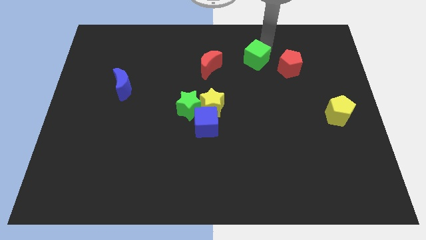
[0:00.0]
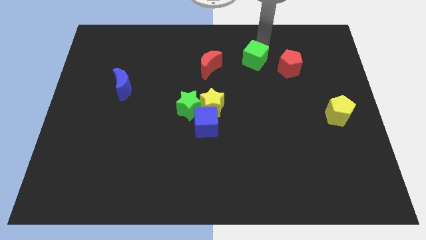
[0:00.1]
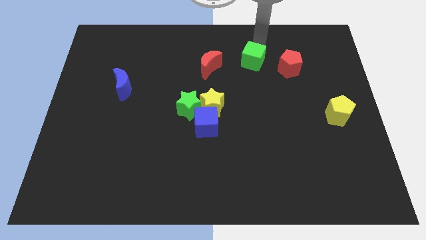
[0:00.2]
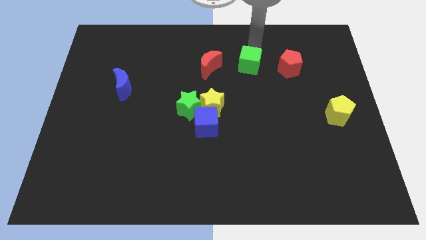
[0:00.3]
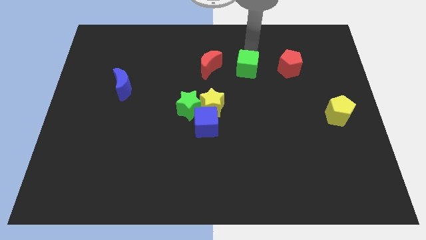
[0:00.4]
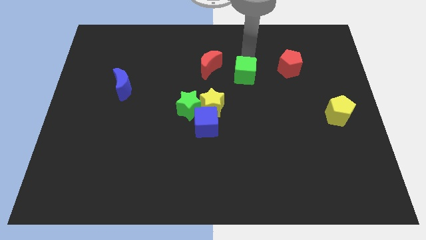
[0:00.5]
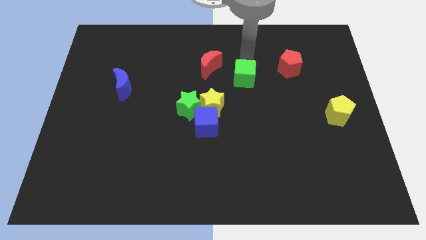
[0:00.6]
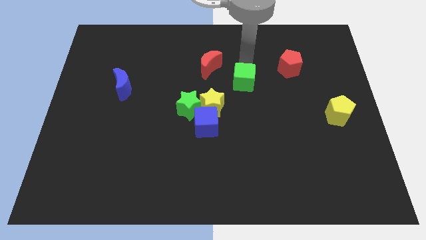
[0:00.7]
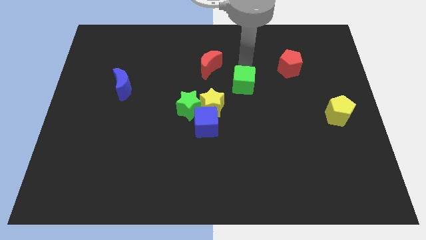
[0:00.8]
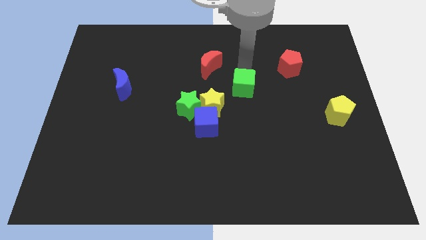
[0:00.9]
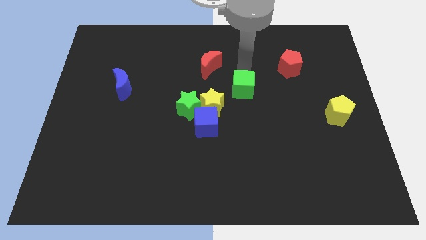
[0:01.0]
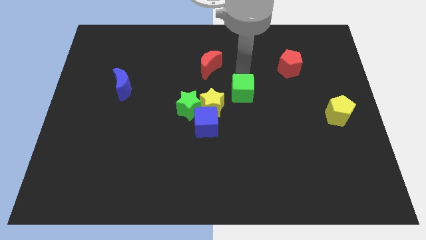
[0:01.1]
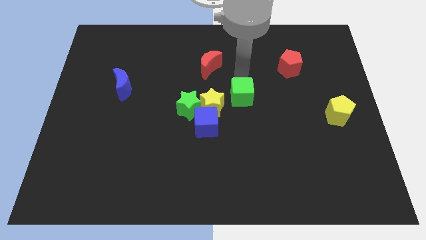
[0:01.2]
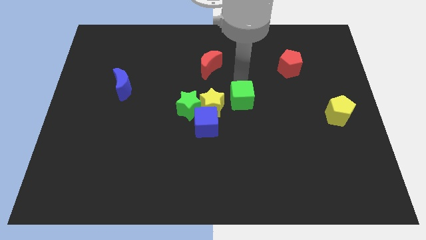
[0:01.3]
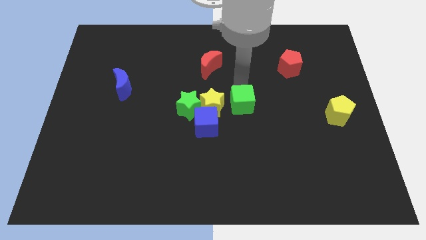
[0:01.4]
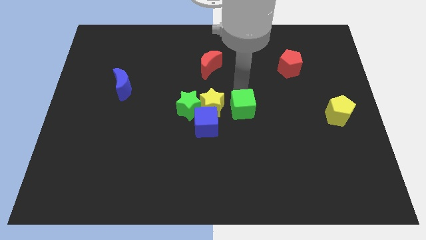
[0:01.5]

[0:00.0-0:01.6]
push the green cube to the right side of the yellow star

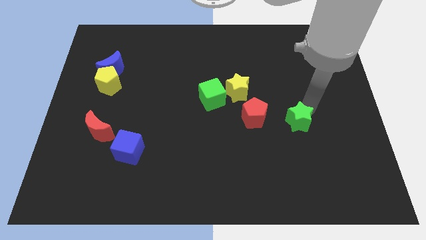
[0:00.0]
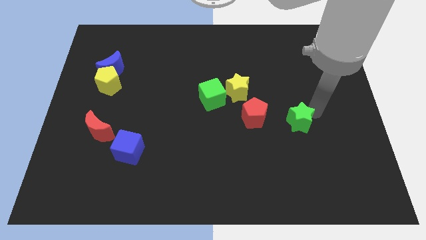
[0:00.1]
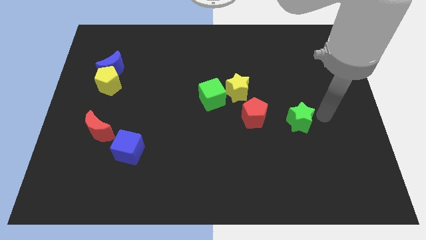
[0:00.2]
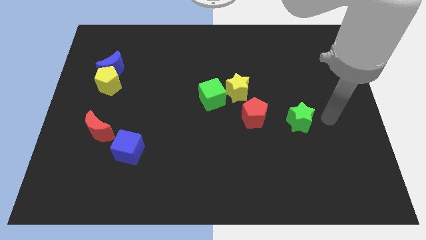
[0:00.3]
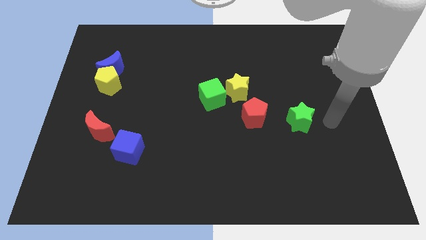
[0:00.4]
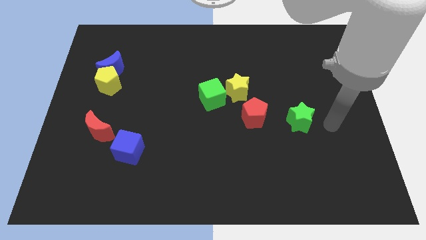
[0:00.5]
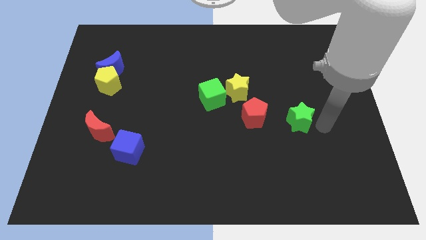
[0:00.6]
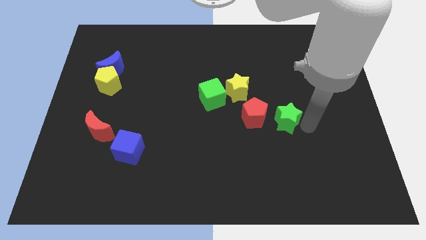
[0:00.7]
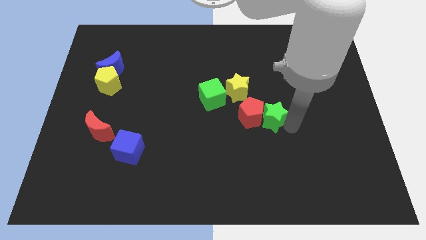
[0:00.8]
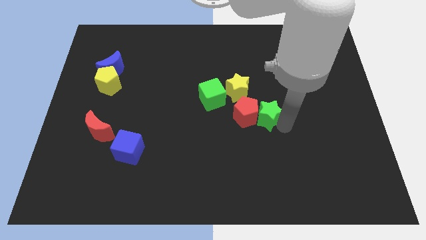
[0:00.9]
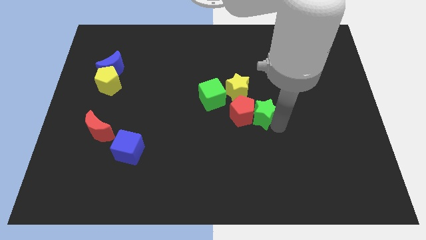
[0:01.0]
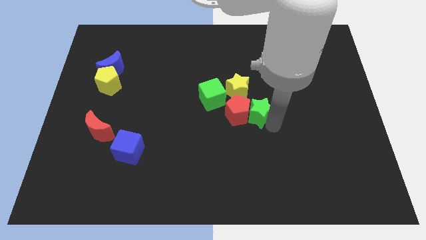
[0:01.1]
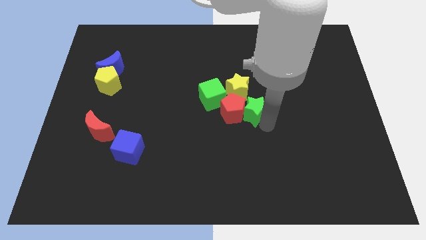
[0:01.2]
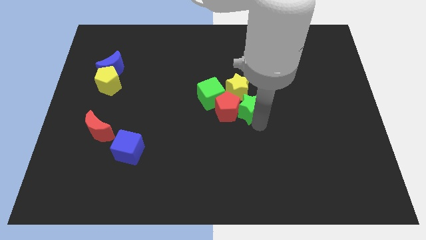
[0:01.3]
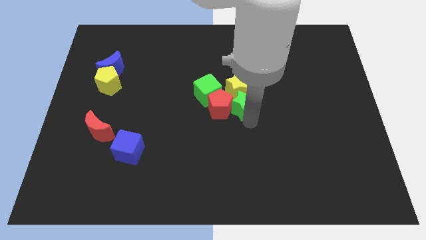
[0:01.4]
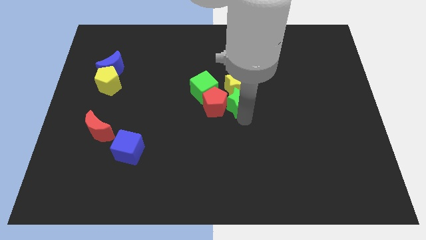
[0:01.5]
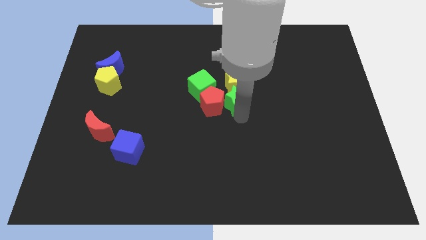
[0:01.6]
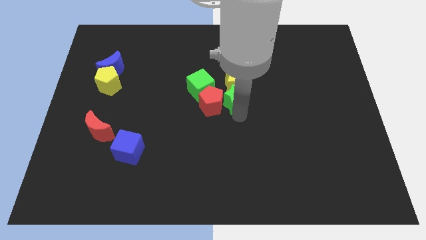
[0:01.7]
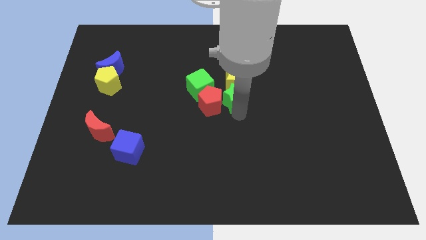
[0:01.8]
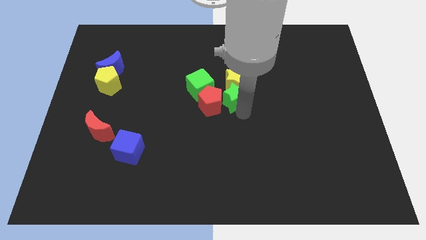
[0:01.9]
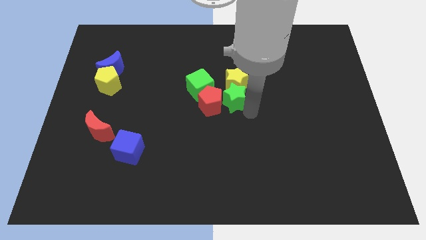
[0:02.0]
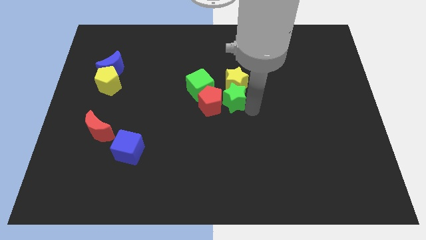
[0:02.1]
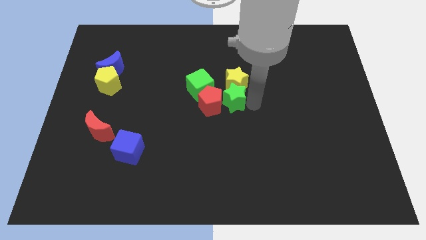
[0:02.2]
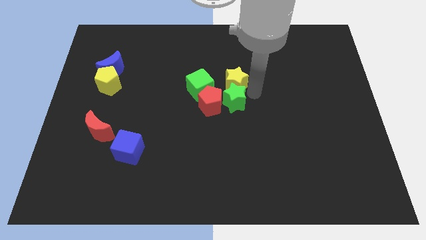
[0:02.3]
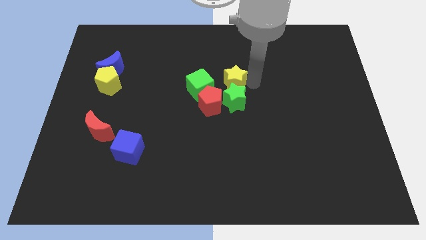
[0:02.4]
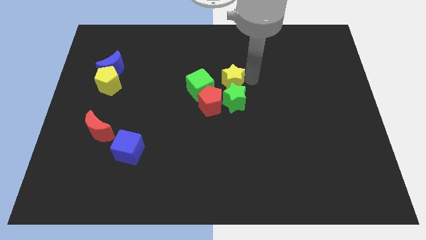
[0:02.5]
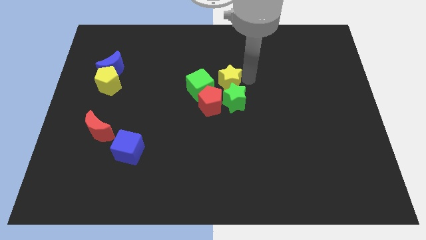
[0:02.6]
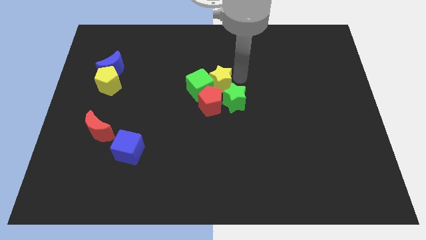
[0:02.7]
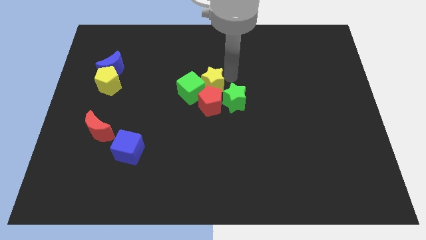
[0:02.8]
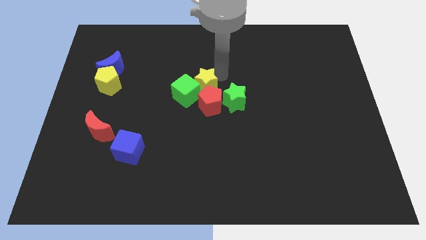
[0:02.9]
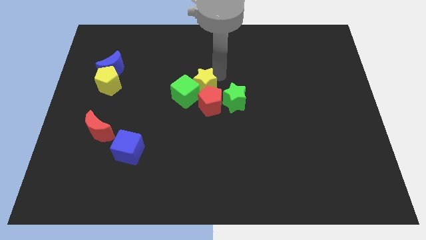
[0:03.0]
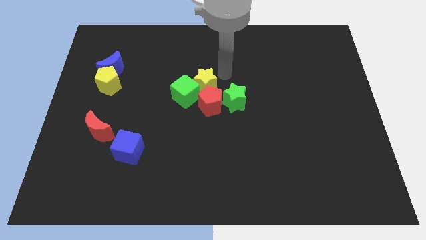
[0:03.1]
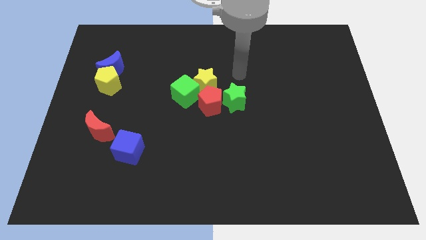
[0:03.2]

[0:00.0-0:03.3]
push the yellow star into the green cube

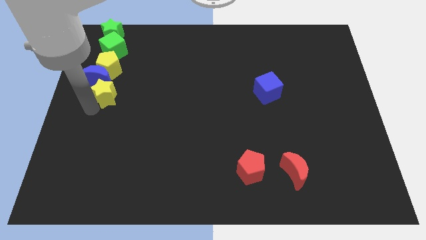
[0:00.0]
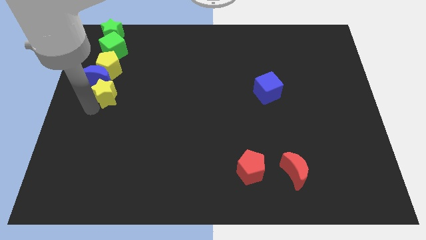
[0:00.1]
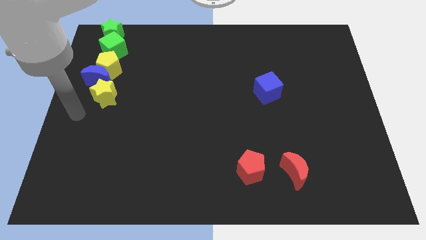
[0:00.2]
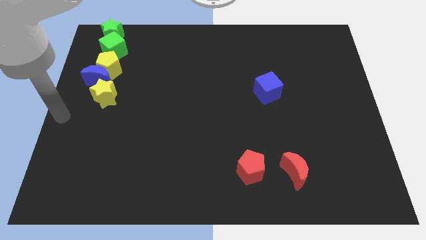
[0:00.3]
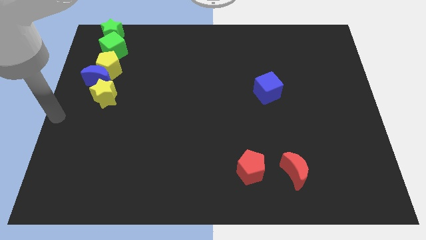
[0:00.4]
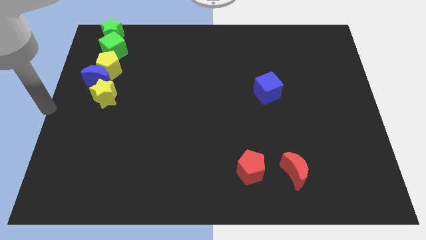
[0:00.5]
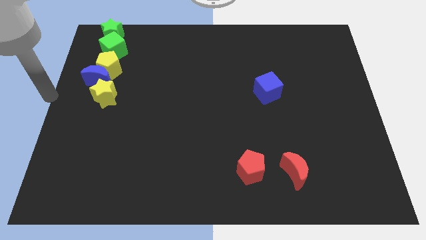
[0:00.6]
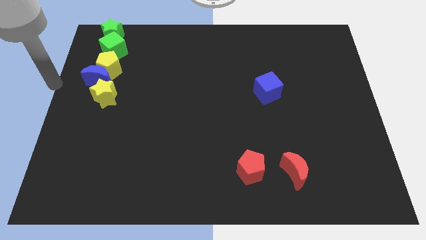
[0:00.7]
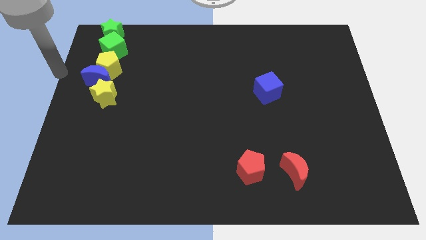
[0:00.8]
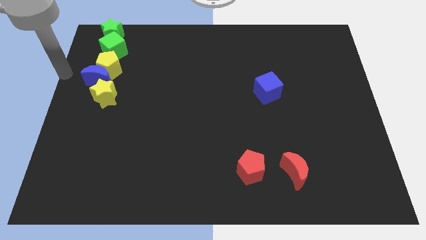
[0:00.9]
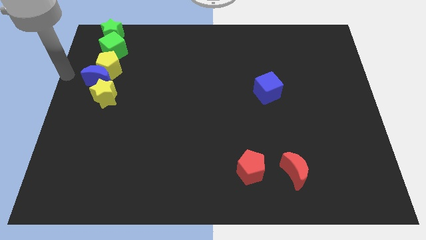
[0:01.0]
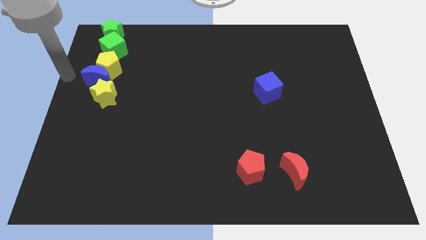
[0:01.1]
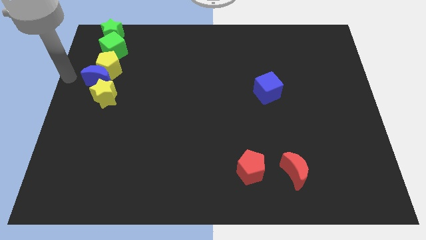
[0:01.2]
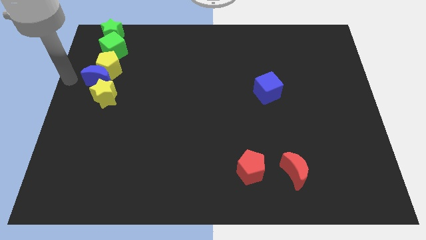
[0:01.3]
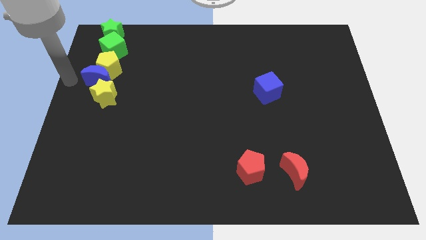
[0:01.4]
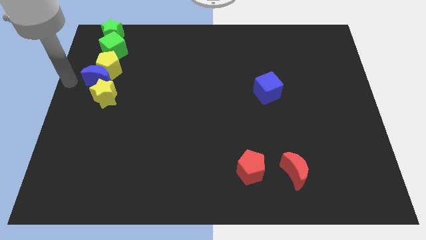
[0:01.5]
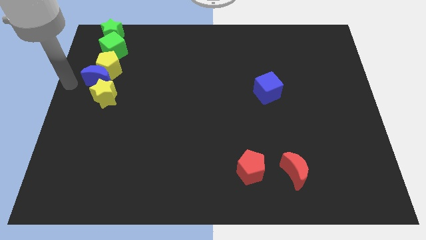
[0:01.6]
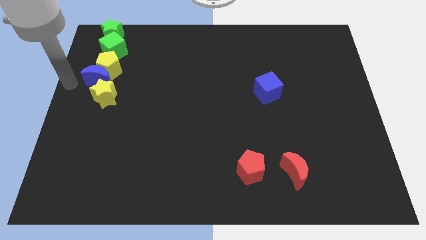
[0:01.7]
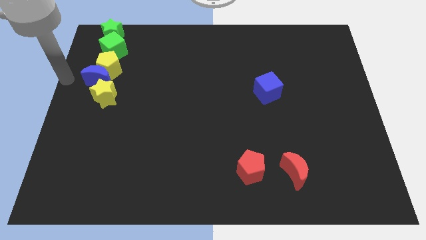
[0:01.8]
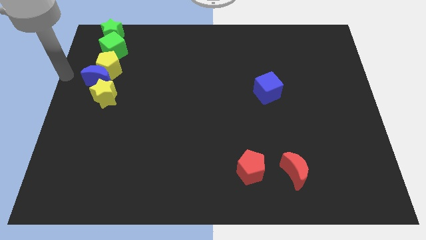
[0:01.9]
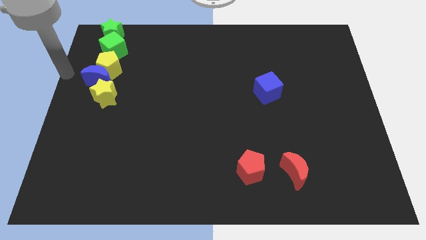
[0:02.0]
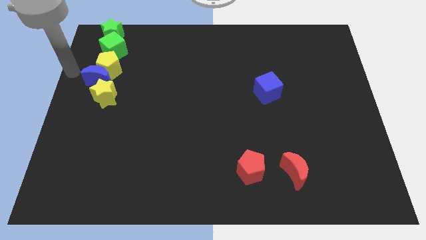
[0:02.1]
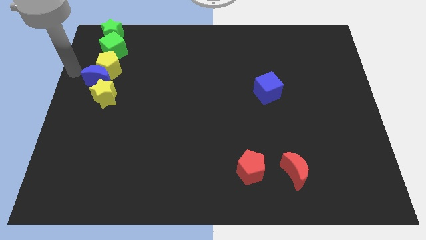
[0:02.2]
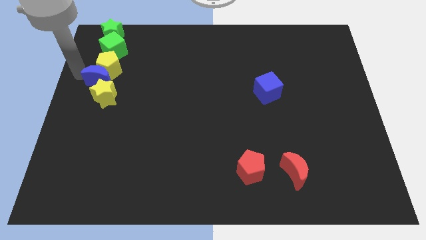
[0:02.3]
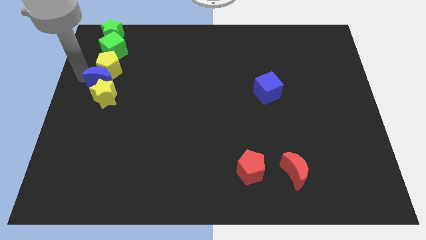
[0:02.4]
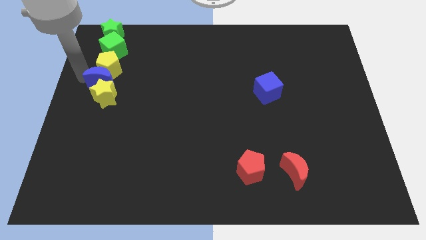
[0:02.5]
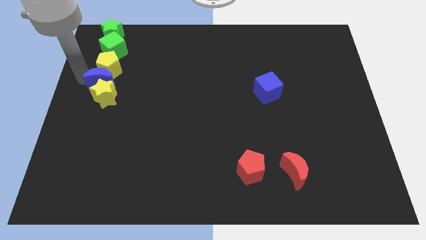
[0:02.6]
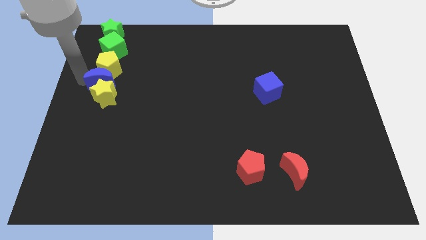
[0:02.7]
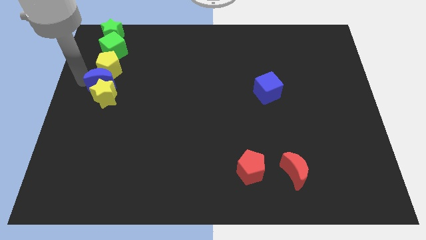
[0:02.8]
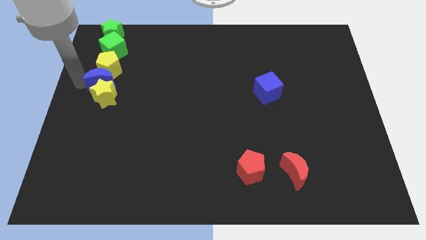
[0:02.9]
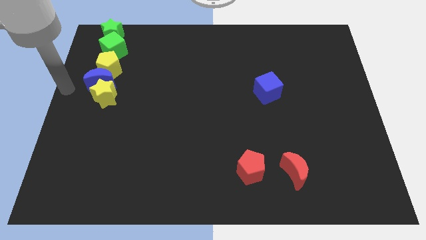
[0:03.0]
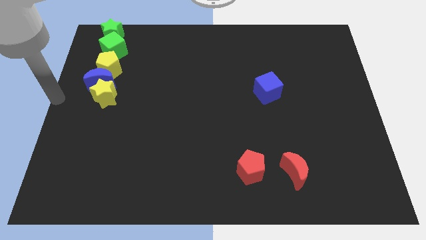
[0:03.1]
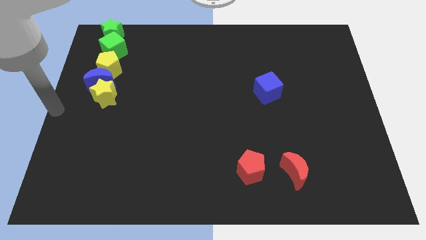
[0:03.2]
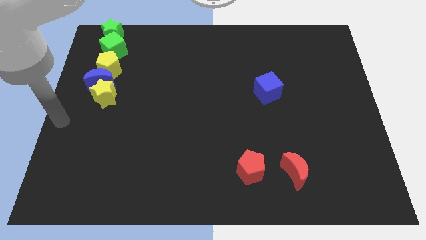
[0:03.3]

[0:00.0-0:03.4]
adjust the blue moon in between the yellow blocks

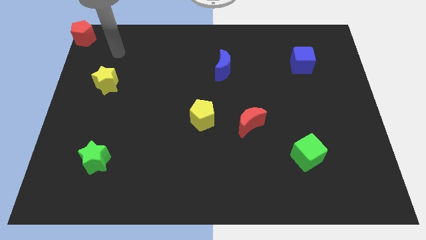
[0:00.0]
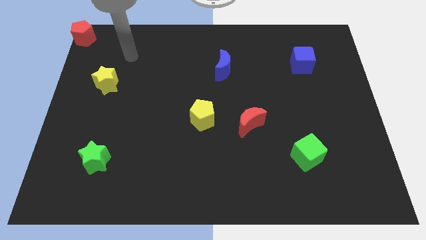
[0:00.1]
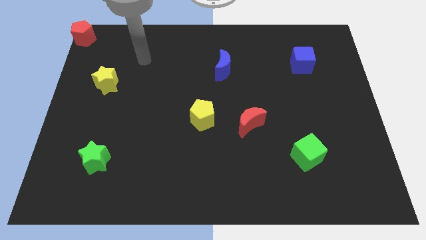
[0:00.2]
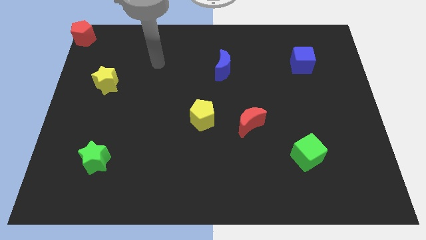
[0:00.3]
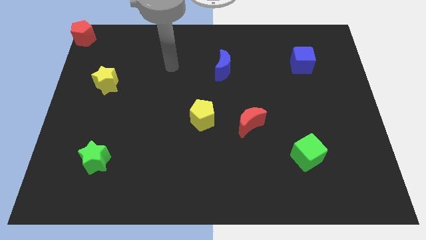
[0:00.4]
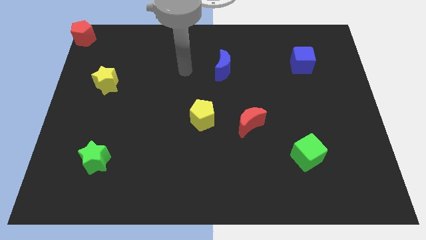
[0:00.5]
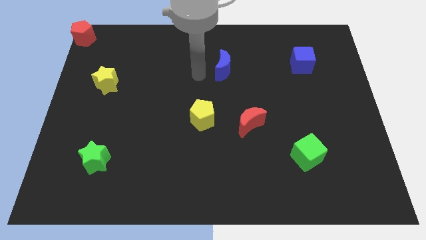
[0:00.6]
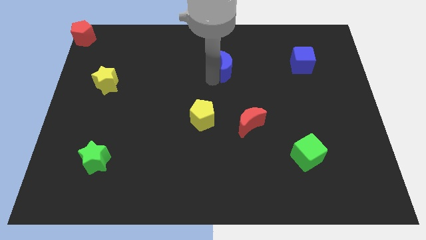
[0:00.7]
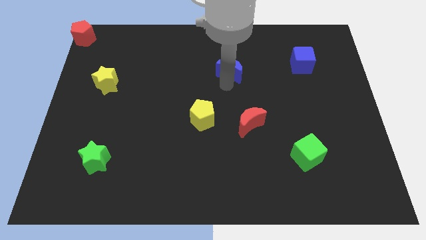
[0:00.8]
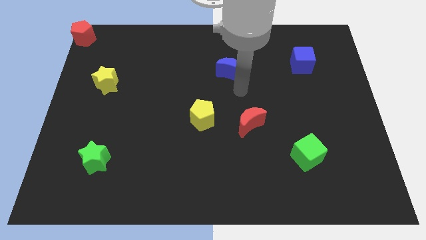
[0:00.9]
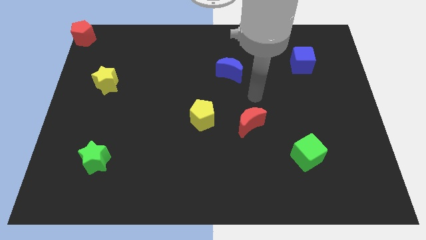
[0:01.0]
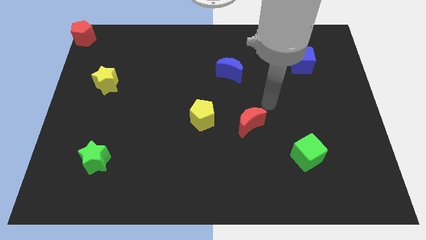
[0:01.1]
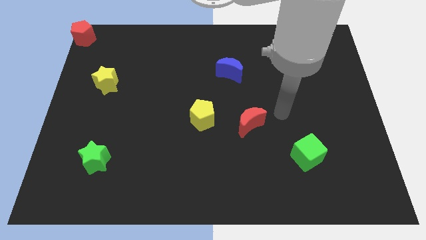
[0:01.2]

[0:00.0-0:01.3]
move the blue moon slightly
